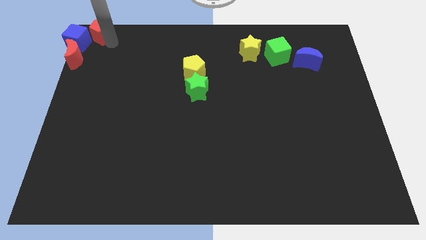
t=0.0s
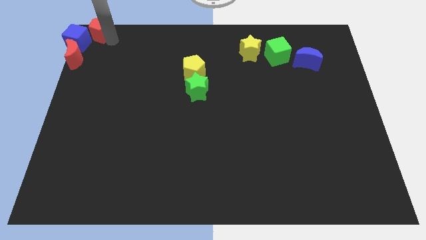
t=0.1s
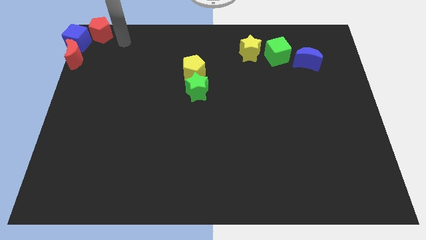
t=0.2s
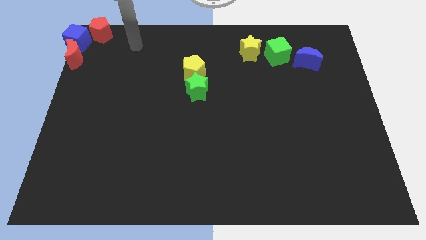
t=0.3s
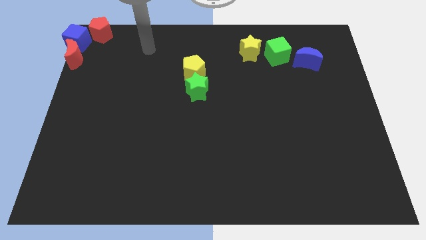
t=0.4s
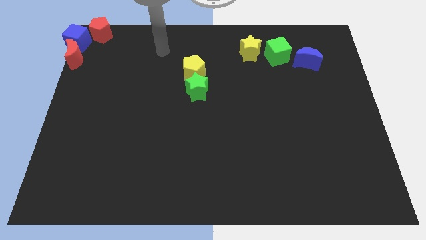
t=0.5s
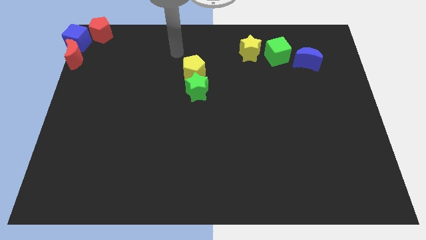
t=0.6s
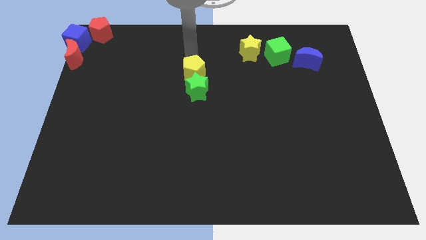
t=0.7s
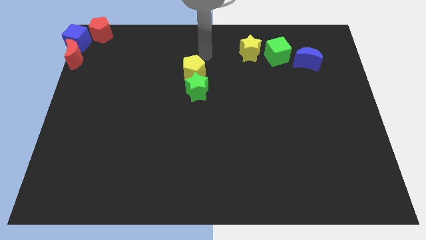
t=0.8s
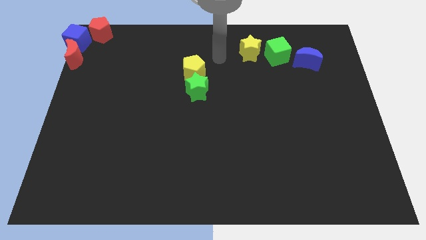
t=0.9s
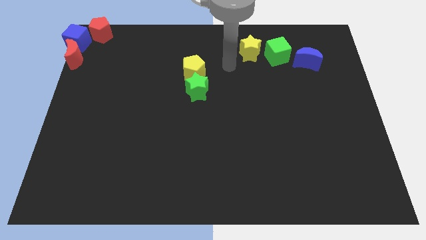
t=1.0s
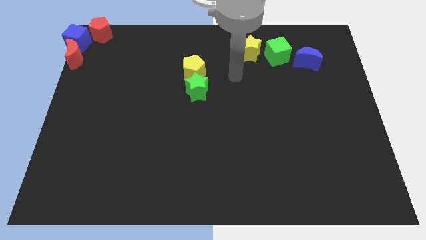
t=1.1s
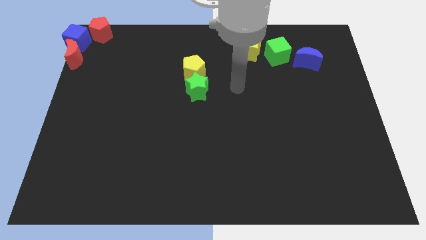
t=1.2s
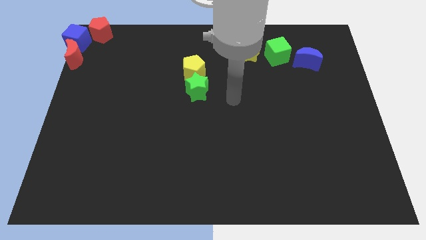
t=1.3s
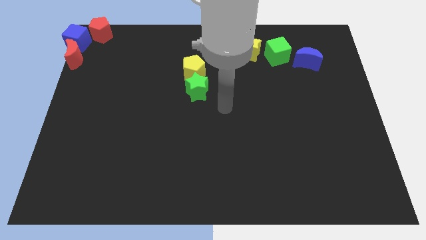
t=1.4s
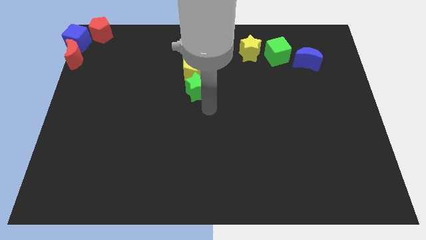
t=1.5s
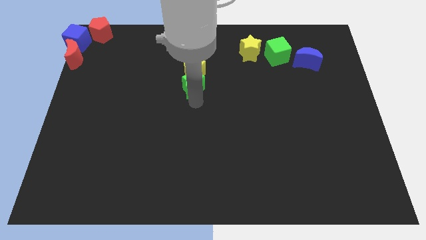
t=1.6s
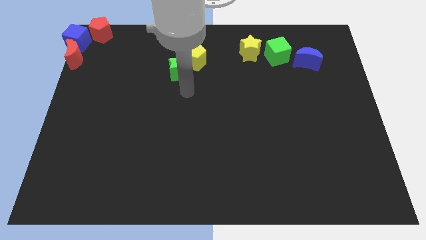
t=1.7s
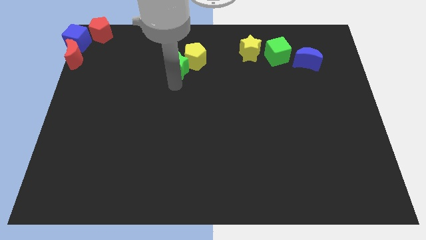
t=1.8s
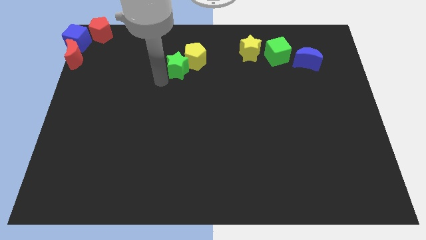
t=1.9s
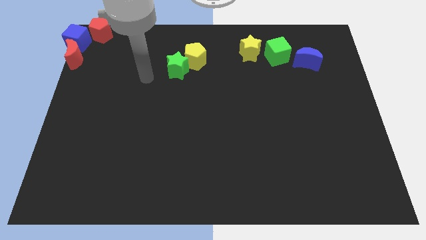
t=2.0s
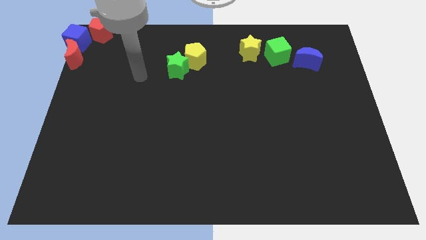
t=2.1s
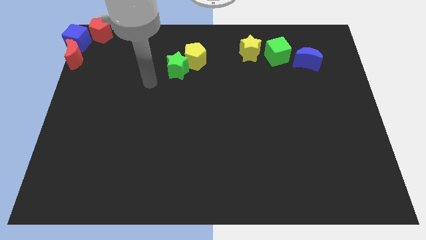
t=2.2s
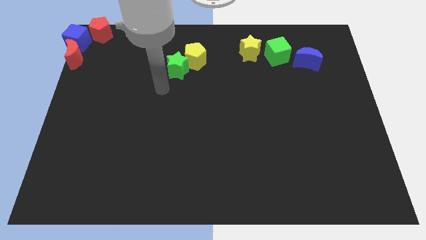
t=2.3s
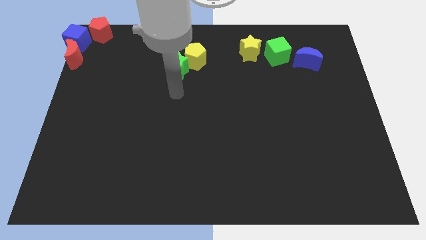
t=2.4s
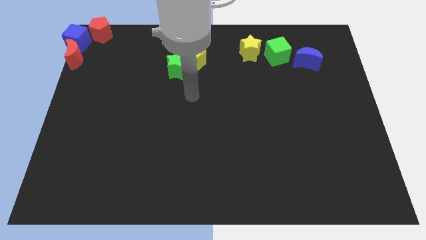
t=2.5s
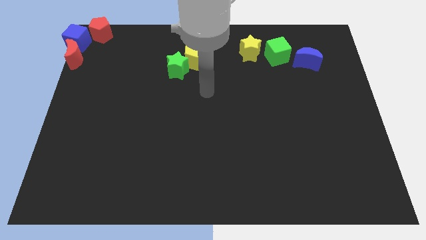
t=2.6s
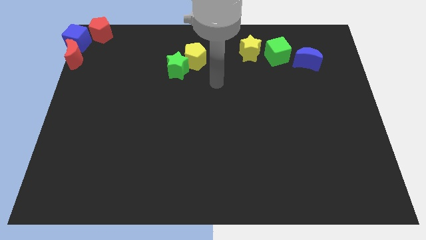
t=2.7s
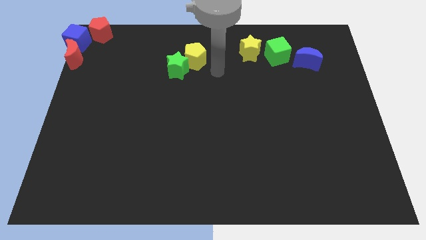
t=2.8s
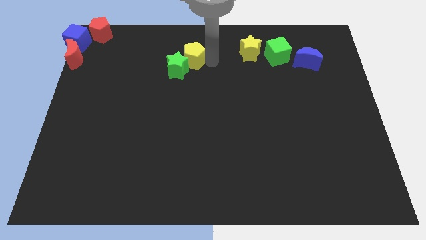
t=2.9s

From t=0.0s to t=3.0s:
place the arm at the right side of the yellow pentagon

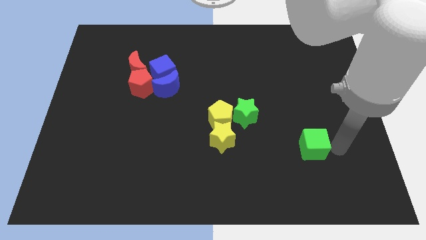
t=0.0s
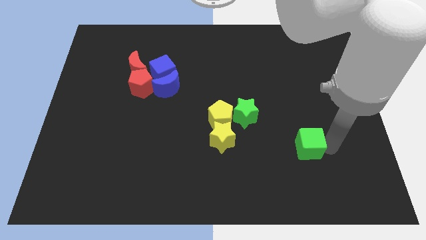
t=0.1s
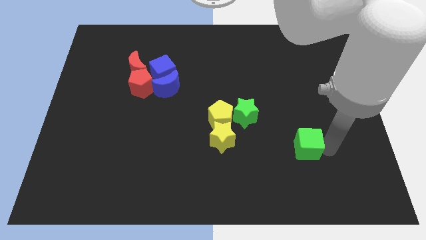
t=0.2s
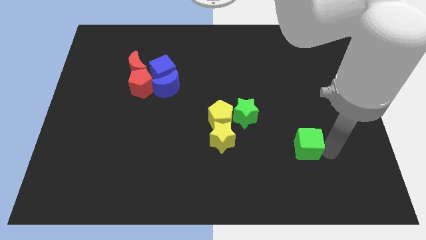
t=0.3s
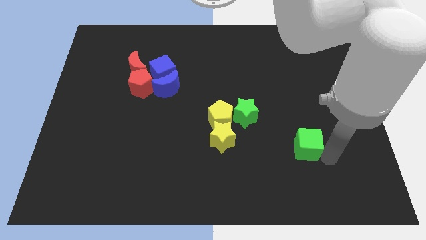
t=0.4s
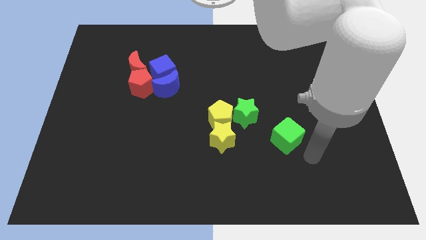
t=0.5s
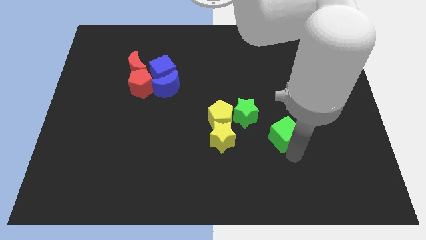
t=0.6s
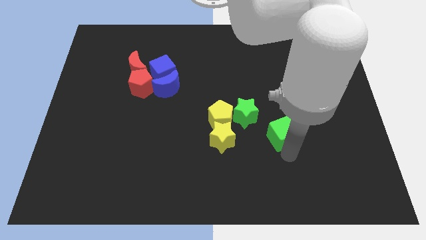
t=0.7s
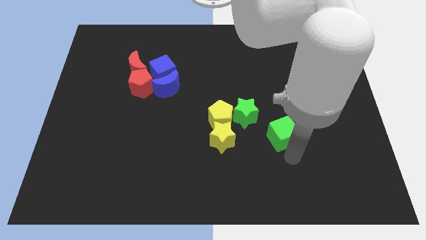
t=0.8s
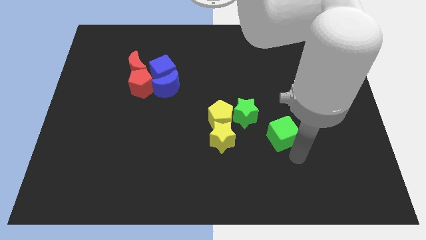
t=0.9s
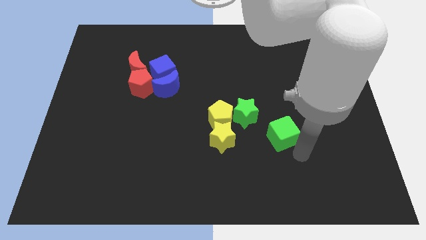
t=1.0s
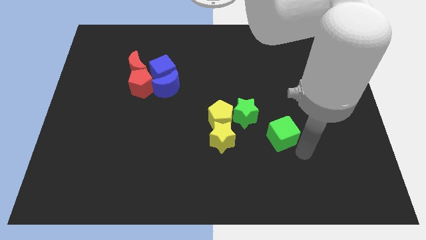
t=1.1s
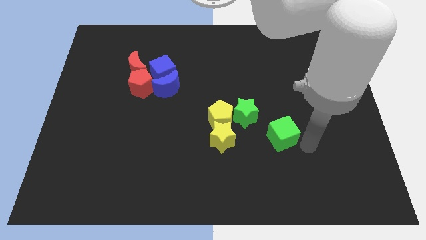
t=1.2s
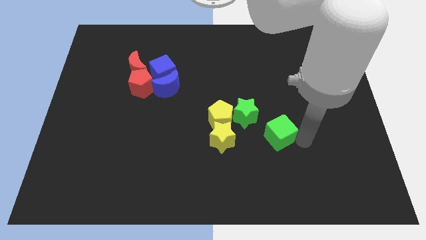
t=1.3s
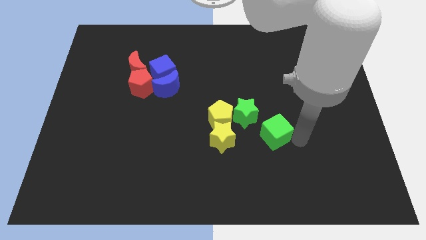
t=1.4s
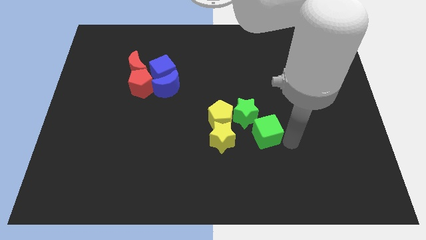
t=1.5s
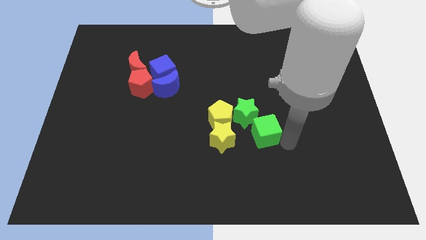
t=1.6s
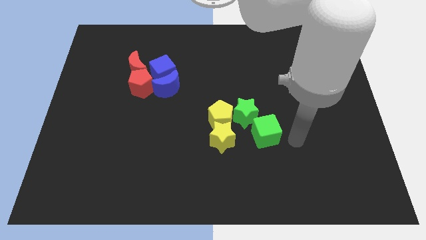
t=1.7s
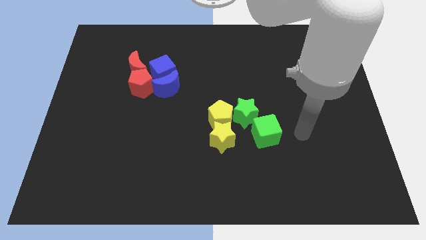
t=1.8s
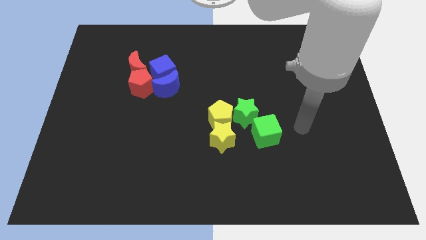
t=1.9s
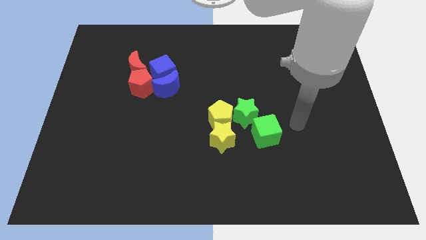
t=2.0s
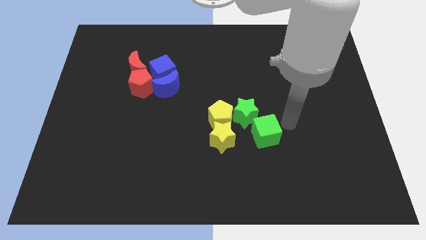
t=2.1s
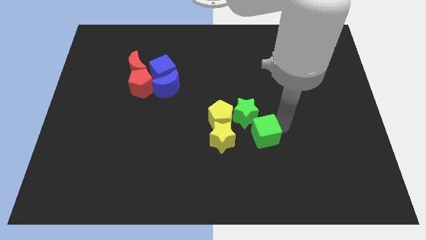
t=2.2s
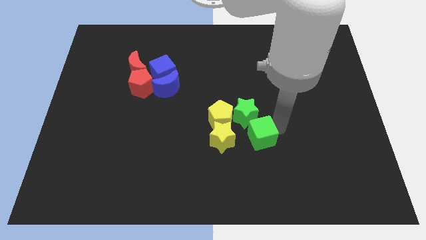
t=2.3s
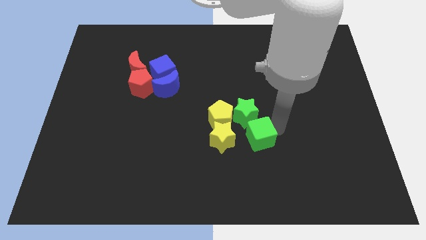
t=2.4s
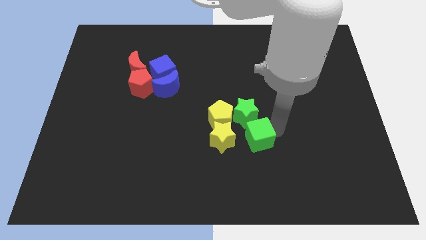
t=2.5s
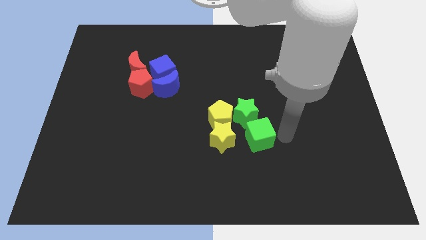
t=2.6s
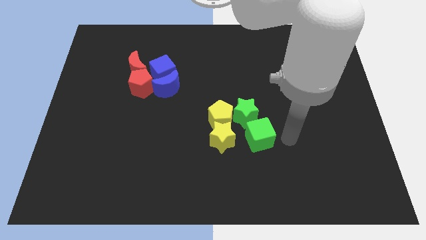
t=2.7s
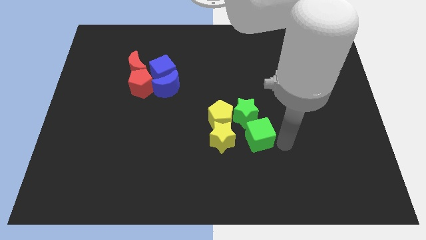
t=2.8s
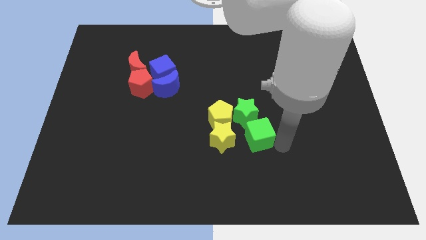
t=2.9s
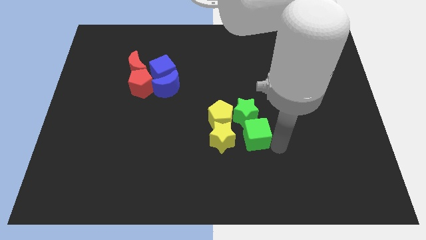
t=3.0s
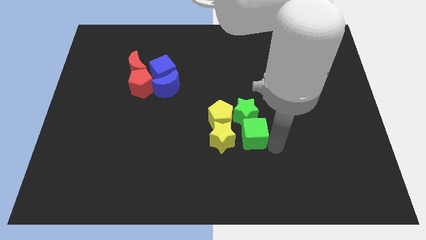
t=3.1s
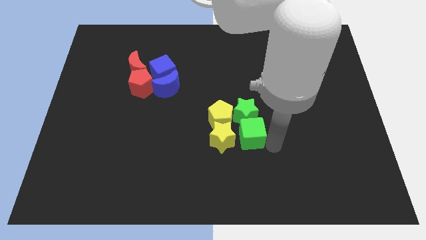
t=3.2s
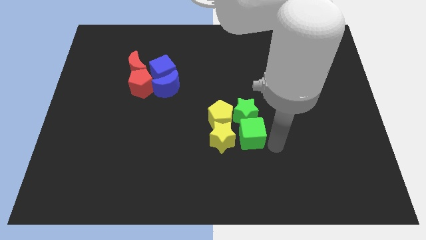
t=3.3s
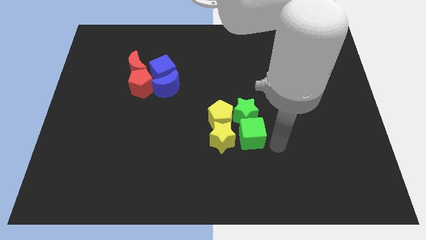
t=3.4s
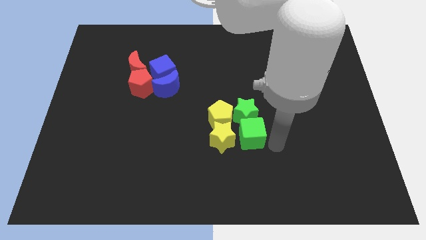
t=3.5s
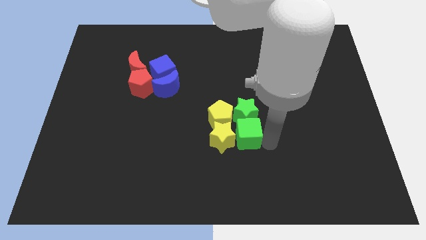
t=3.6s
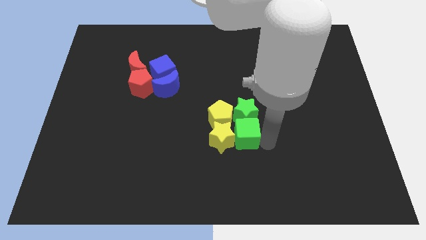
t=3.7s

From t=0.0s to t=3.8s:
push the green cube towards the yellow star

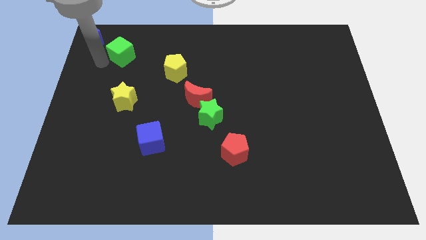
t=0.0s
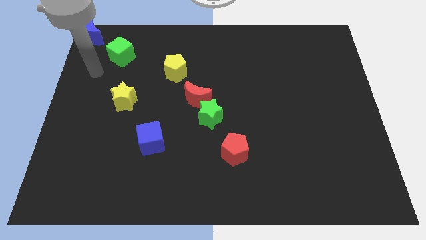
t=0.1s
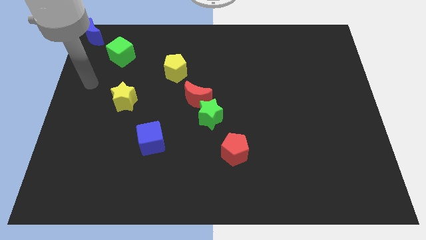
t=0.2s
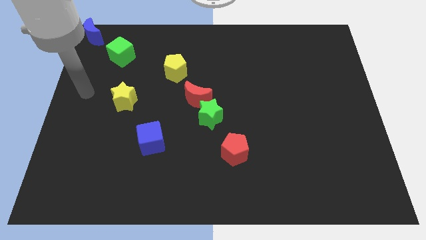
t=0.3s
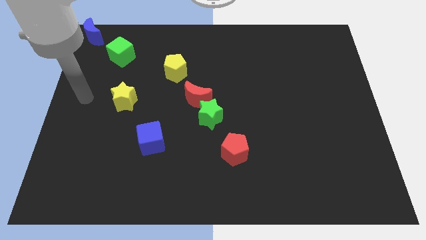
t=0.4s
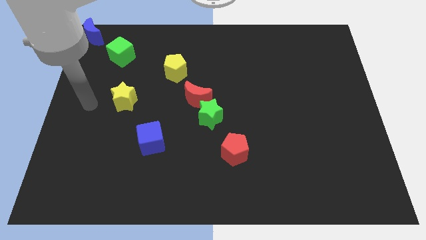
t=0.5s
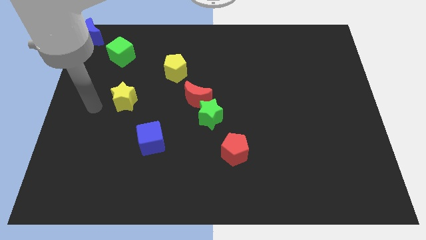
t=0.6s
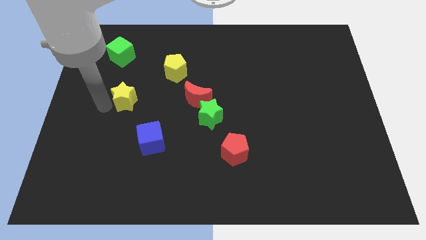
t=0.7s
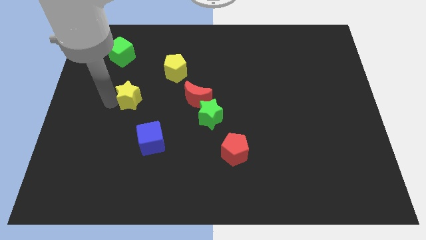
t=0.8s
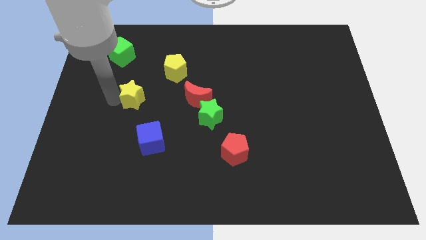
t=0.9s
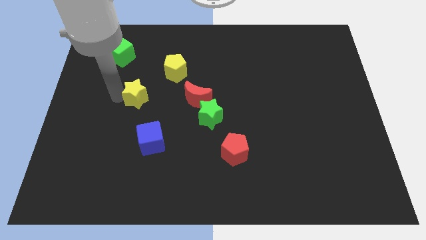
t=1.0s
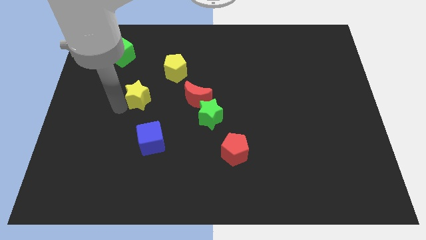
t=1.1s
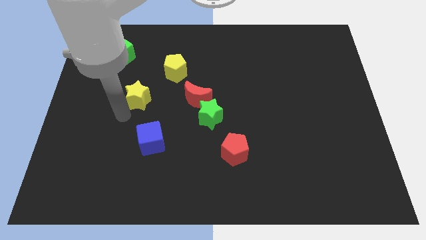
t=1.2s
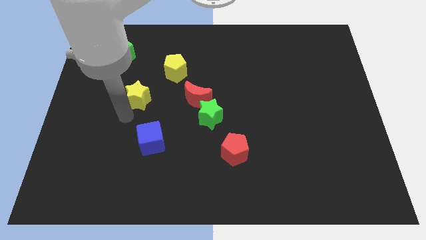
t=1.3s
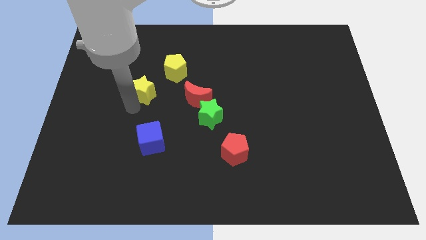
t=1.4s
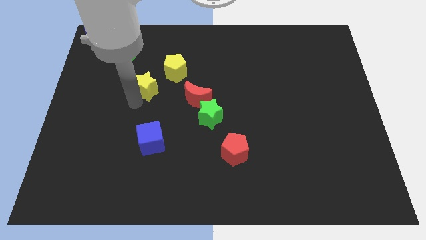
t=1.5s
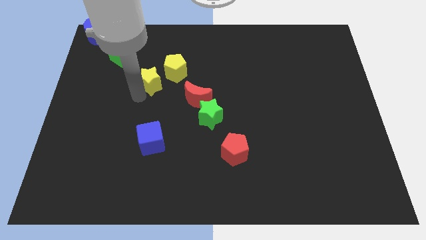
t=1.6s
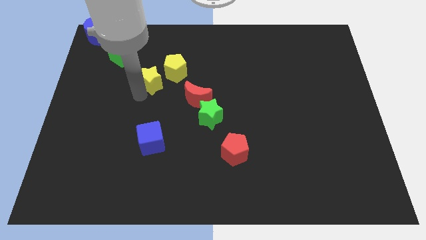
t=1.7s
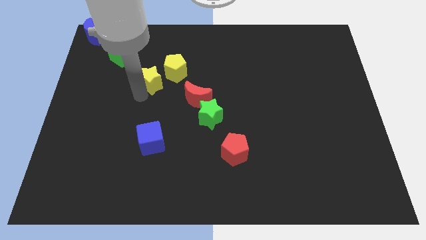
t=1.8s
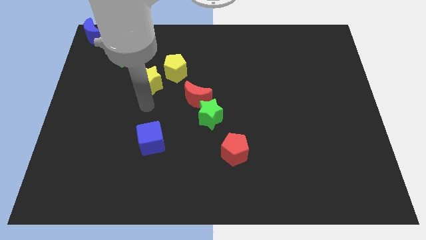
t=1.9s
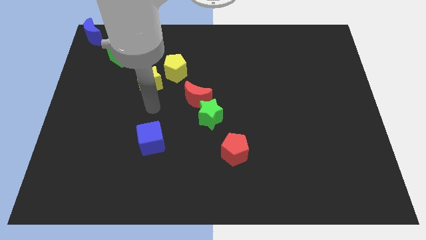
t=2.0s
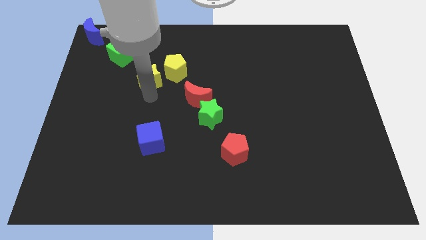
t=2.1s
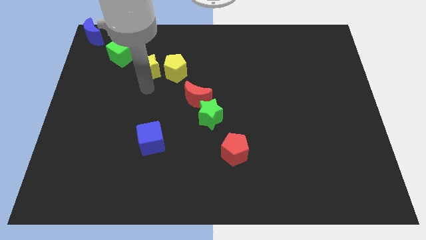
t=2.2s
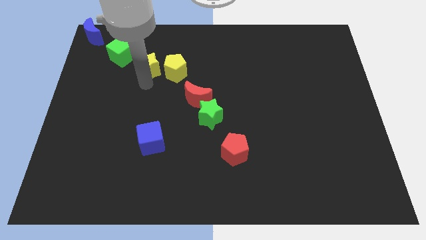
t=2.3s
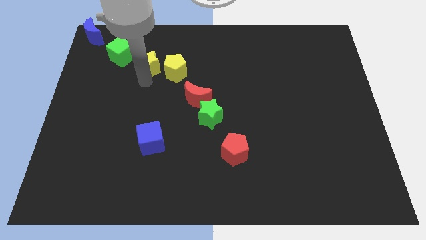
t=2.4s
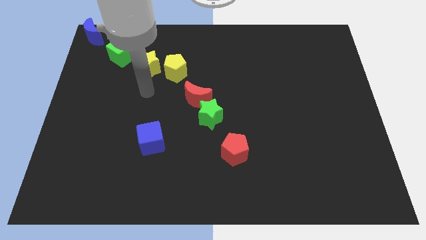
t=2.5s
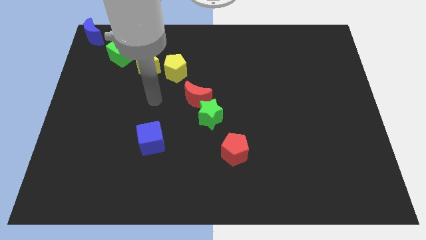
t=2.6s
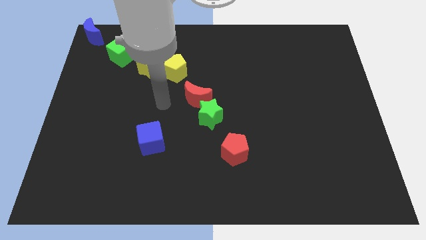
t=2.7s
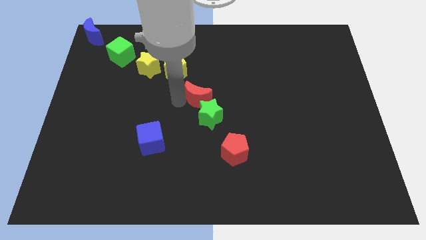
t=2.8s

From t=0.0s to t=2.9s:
push the yellow star to the left side of the yellow pentagon
